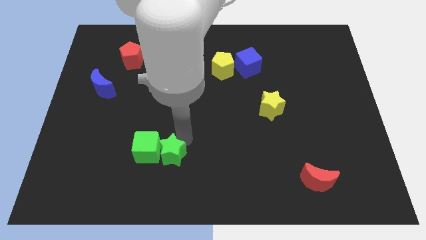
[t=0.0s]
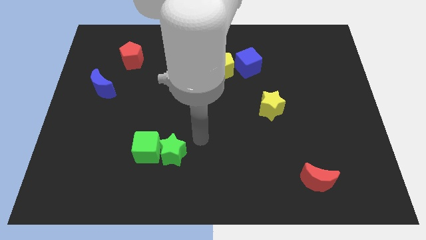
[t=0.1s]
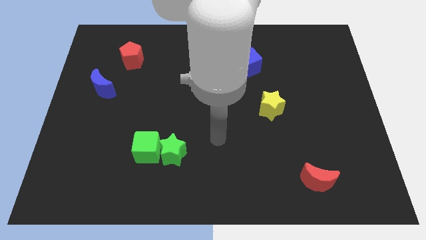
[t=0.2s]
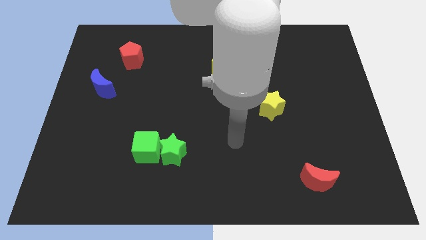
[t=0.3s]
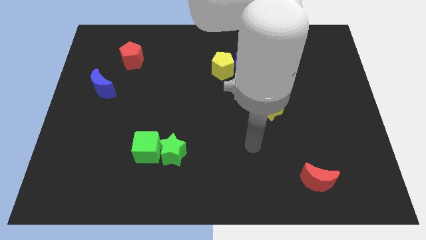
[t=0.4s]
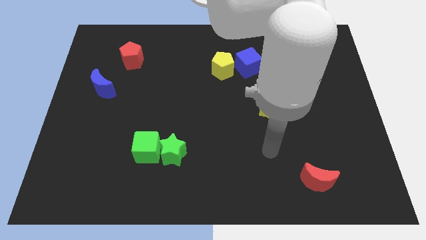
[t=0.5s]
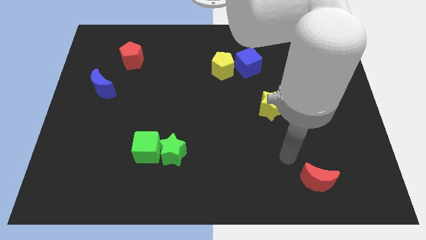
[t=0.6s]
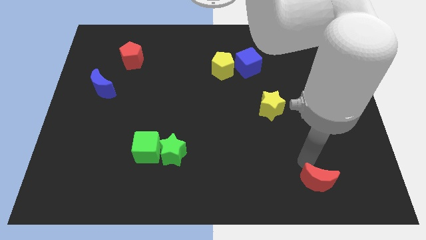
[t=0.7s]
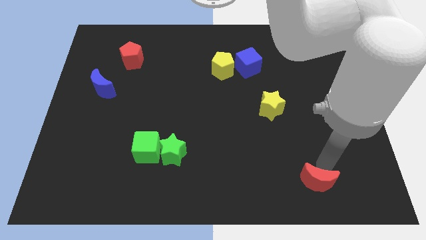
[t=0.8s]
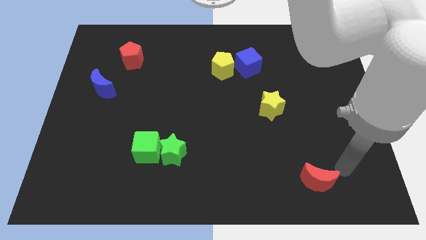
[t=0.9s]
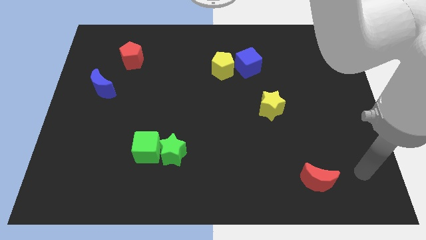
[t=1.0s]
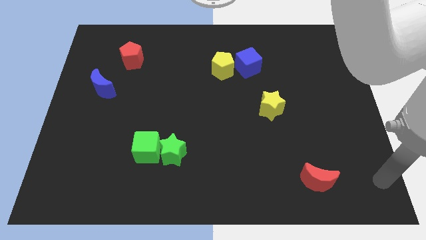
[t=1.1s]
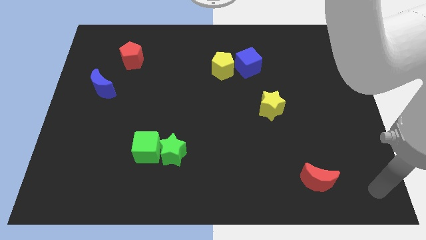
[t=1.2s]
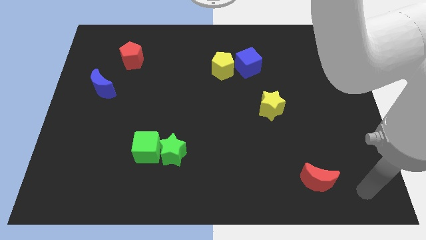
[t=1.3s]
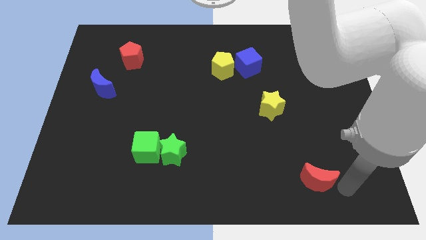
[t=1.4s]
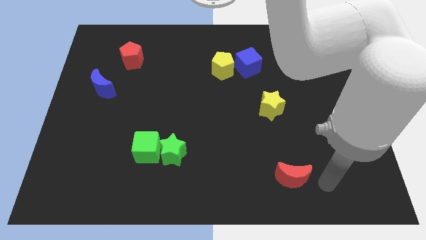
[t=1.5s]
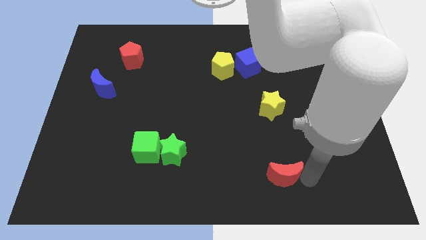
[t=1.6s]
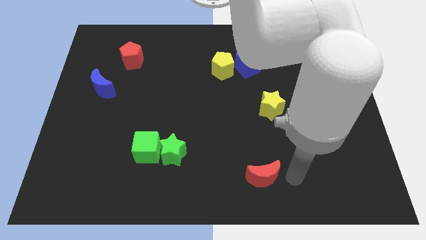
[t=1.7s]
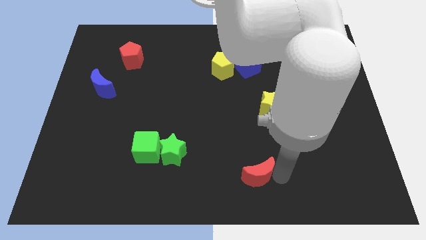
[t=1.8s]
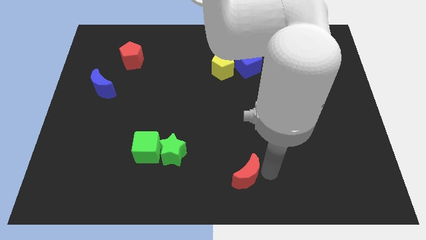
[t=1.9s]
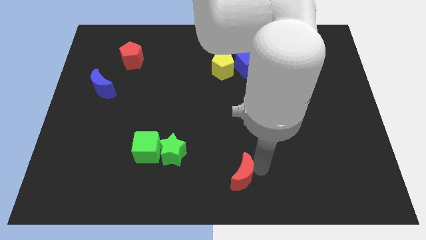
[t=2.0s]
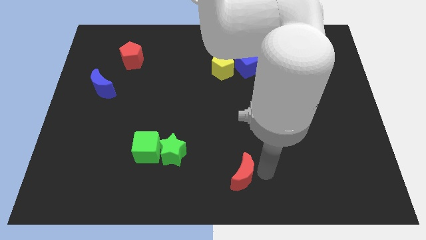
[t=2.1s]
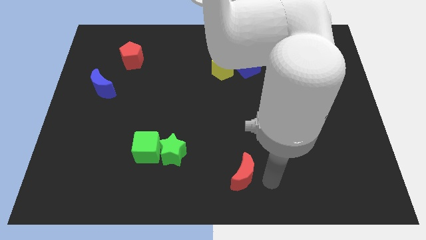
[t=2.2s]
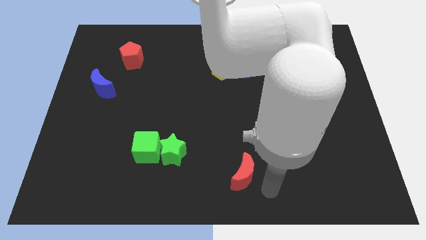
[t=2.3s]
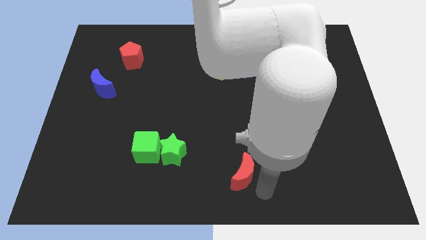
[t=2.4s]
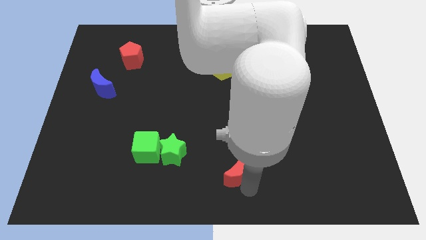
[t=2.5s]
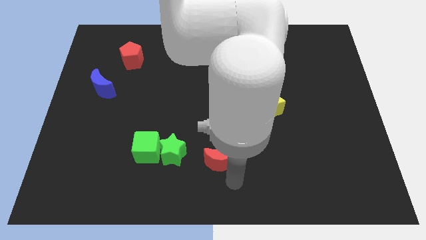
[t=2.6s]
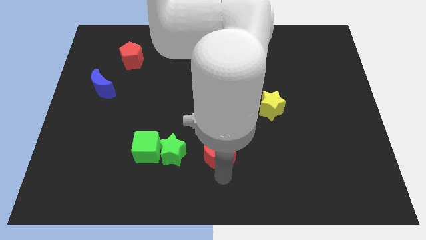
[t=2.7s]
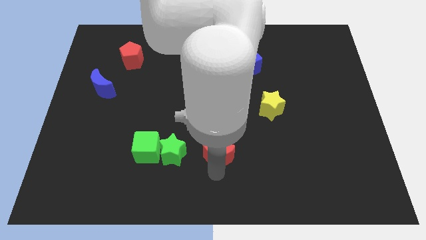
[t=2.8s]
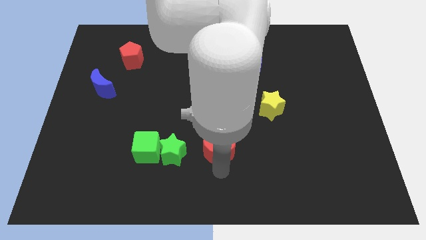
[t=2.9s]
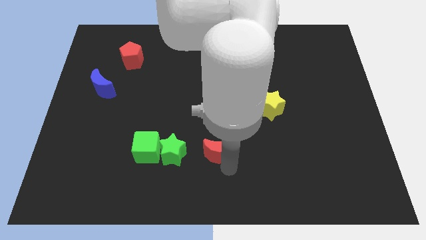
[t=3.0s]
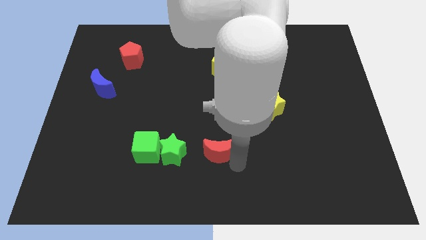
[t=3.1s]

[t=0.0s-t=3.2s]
place the red moon parallel right to the green star

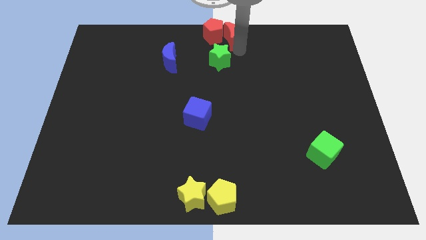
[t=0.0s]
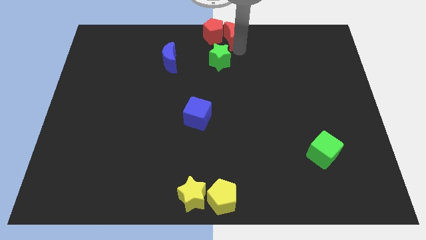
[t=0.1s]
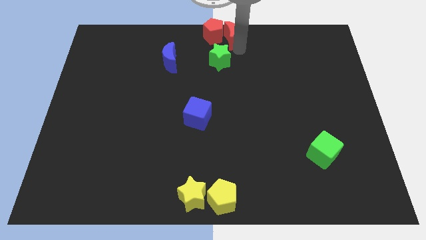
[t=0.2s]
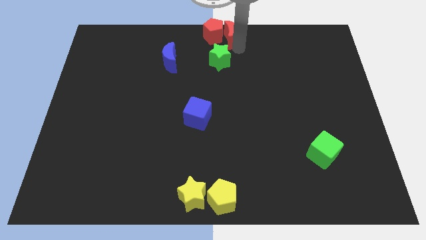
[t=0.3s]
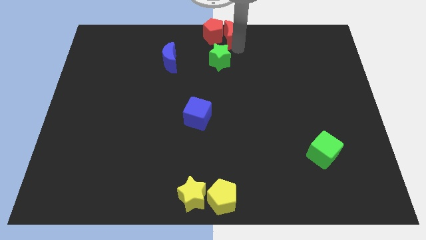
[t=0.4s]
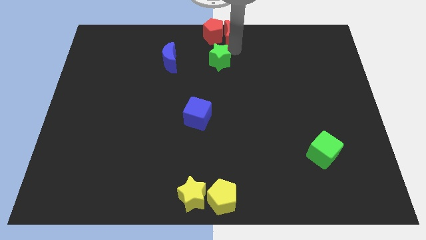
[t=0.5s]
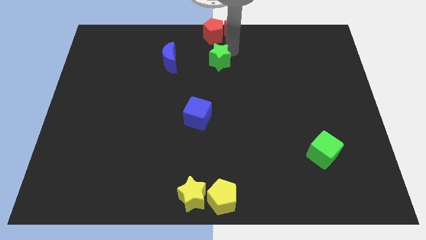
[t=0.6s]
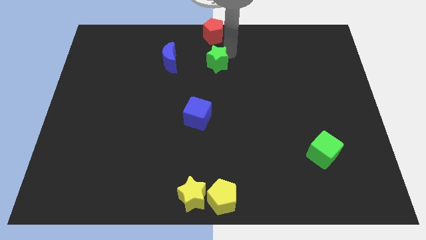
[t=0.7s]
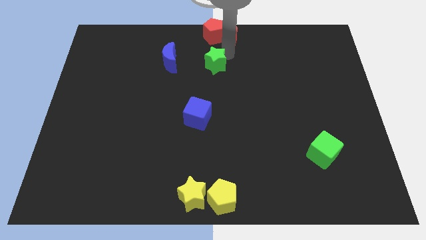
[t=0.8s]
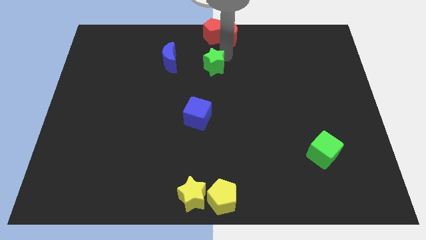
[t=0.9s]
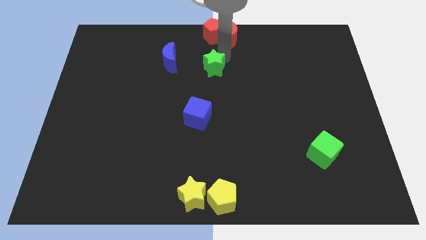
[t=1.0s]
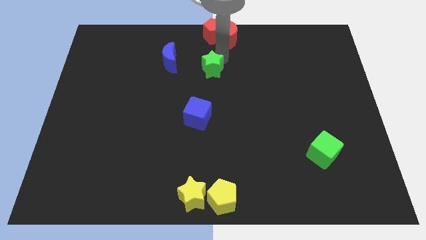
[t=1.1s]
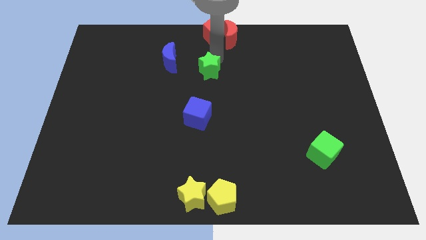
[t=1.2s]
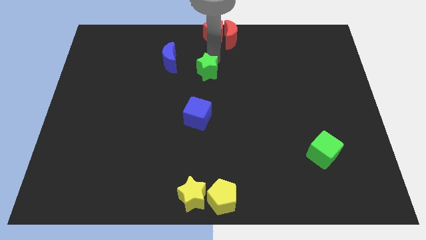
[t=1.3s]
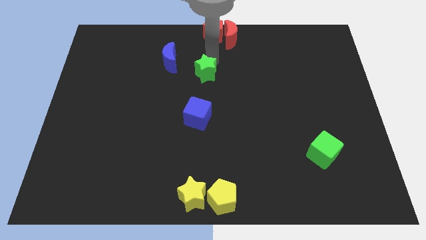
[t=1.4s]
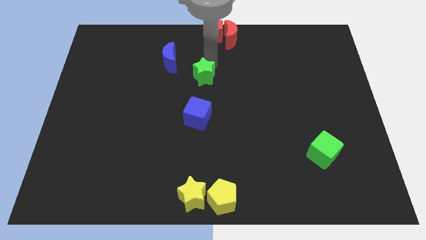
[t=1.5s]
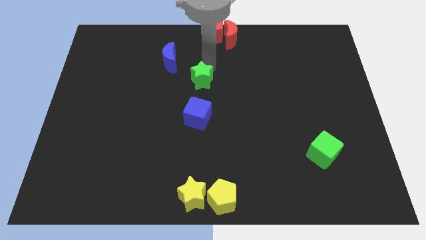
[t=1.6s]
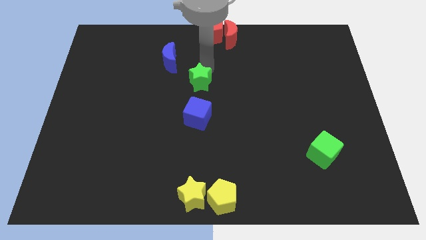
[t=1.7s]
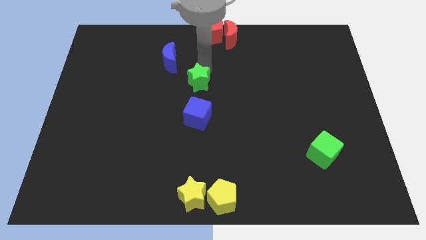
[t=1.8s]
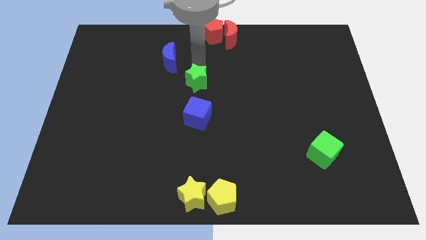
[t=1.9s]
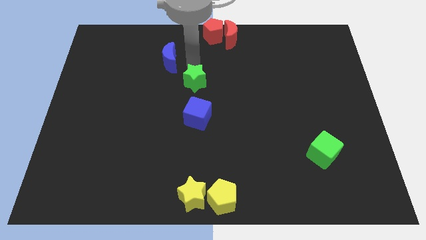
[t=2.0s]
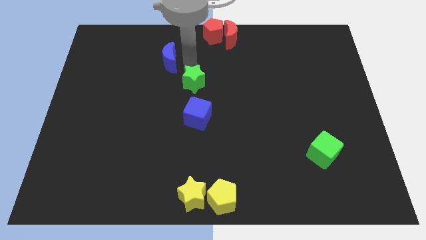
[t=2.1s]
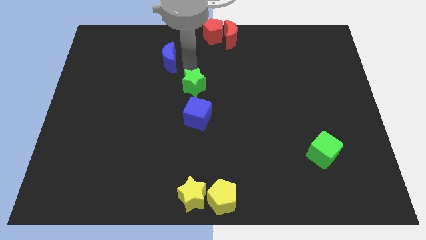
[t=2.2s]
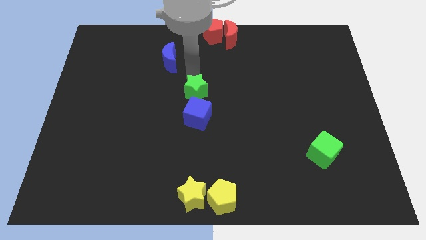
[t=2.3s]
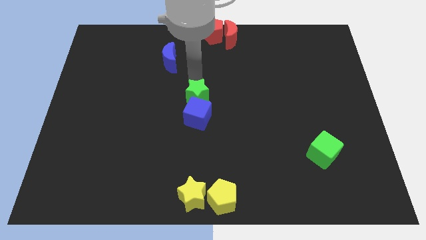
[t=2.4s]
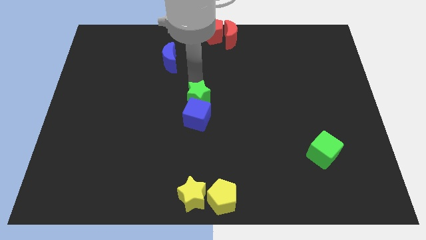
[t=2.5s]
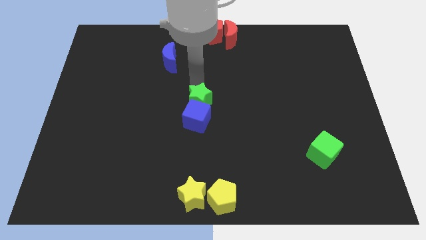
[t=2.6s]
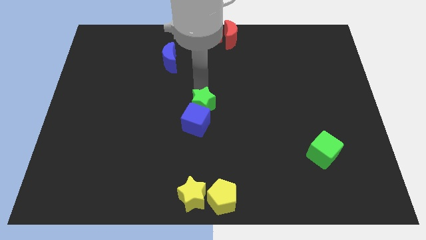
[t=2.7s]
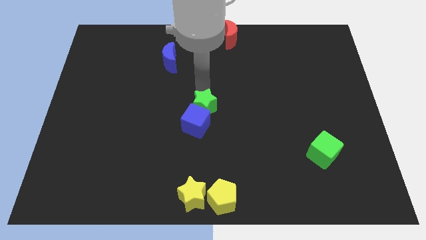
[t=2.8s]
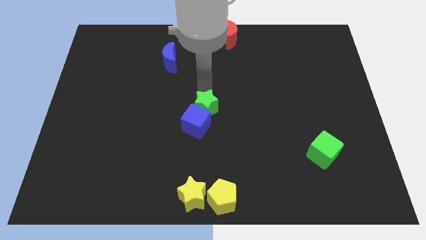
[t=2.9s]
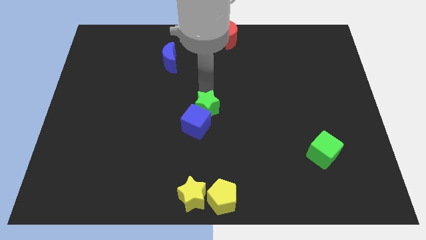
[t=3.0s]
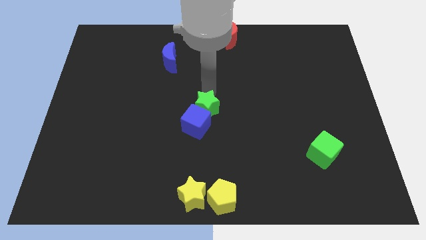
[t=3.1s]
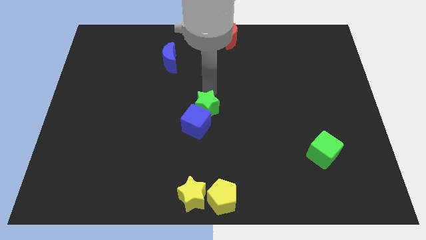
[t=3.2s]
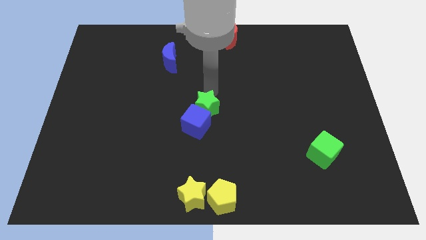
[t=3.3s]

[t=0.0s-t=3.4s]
push the green star to the center of the board

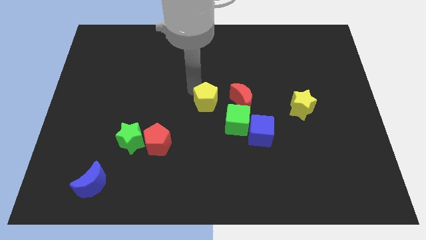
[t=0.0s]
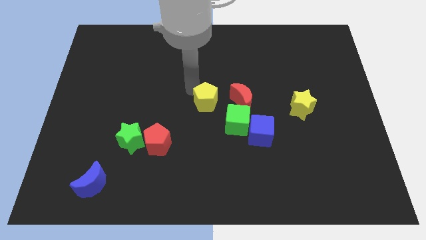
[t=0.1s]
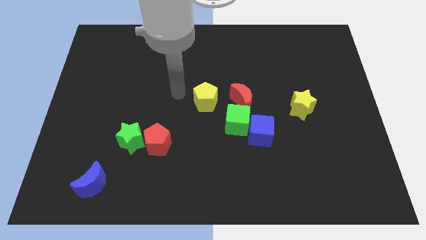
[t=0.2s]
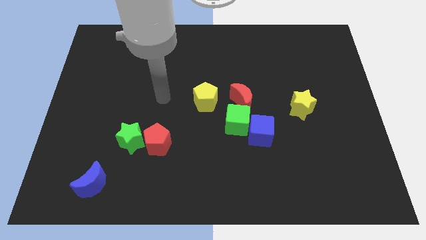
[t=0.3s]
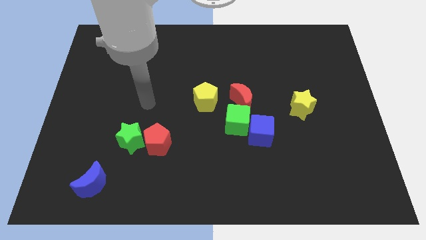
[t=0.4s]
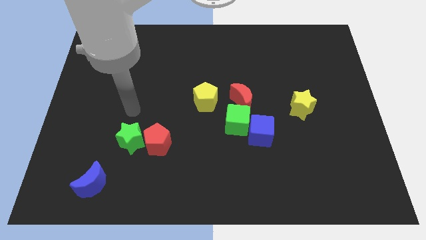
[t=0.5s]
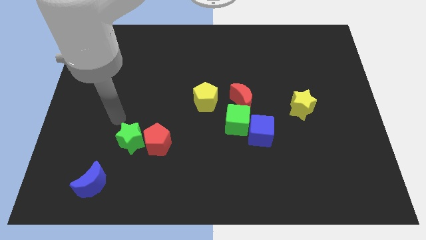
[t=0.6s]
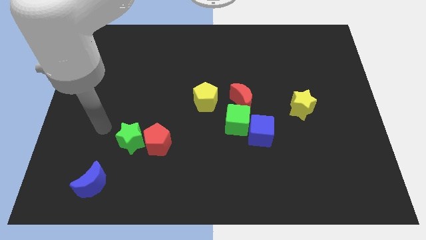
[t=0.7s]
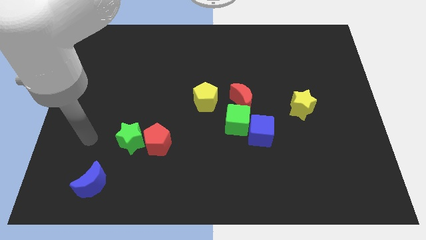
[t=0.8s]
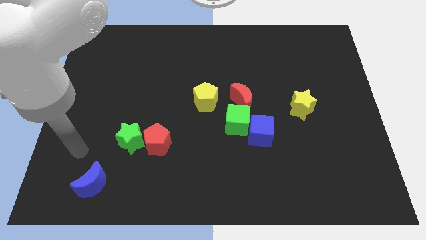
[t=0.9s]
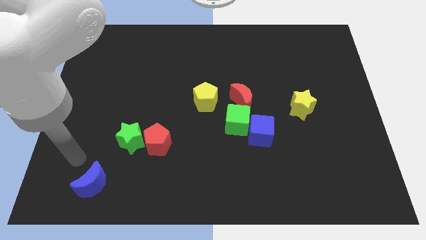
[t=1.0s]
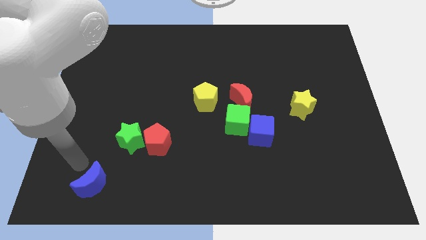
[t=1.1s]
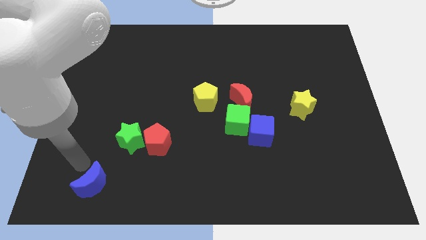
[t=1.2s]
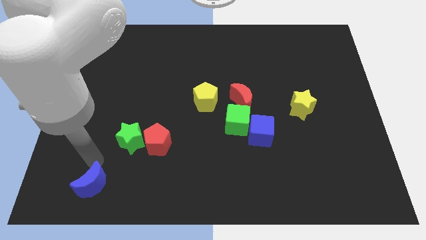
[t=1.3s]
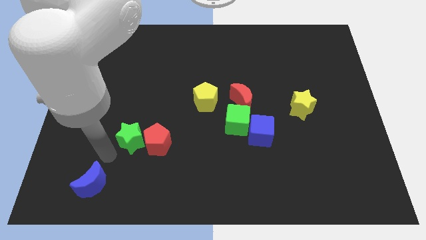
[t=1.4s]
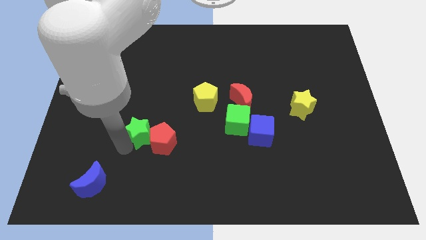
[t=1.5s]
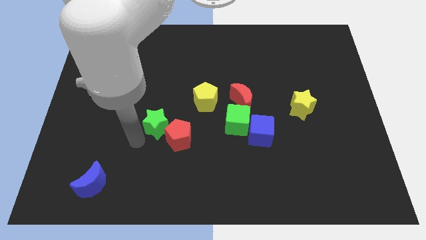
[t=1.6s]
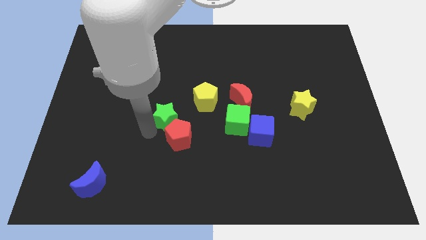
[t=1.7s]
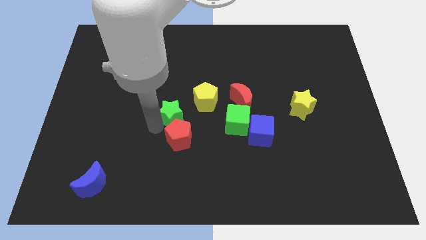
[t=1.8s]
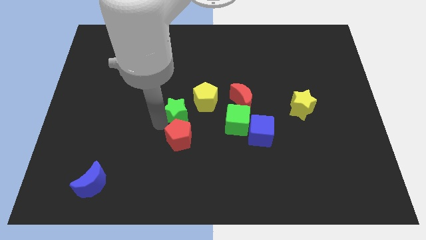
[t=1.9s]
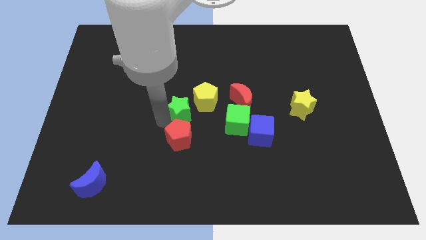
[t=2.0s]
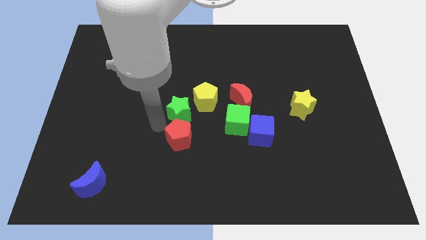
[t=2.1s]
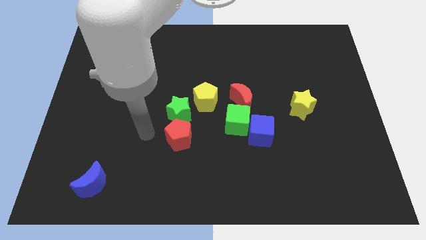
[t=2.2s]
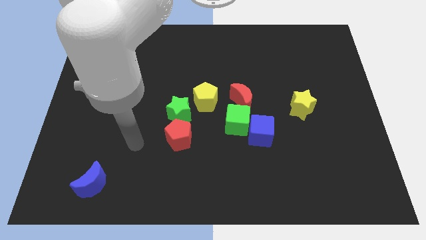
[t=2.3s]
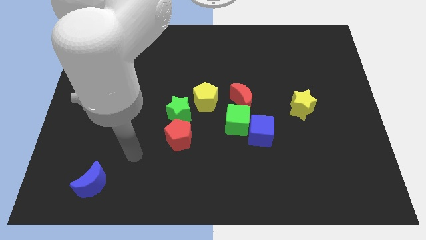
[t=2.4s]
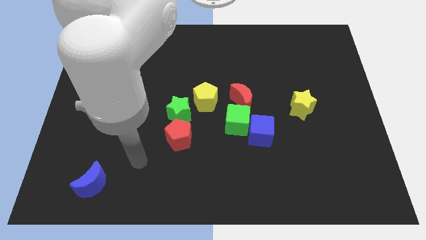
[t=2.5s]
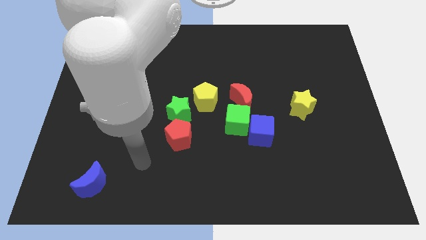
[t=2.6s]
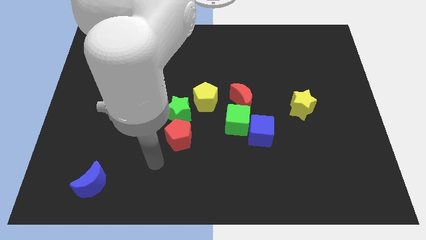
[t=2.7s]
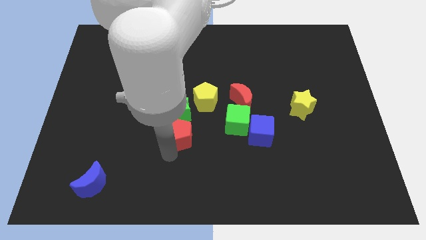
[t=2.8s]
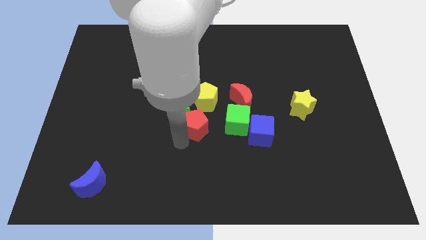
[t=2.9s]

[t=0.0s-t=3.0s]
move the green star to the bottom left of the yellow pentagon
